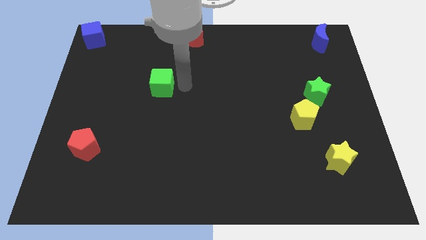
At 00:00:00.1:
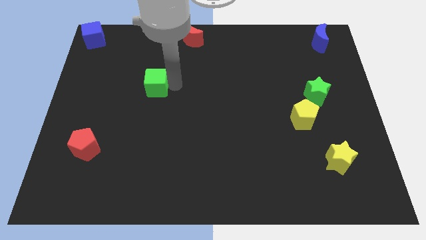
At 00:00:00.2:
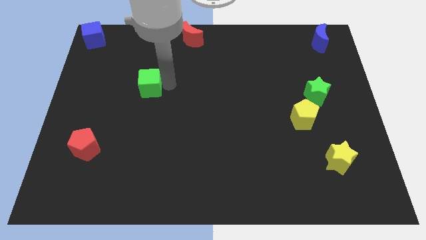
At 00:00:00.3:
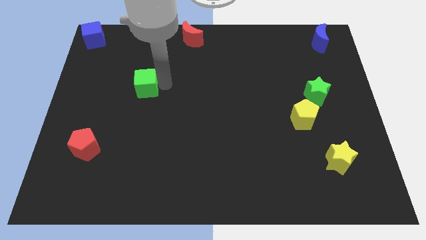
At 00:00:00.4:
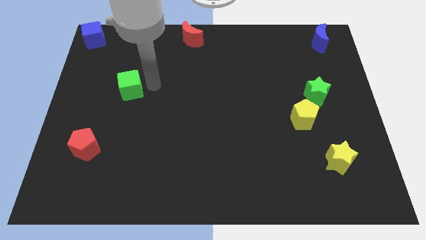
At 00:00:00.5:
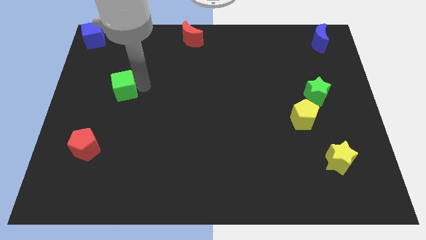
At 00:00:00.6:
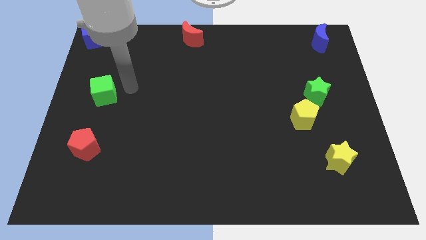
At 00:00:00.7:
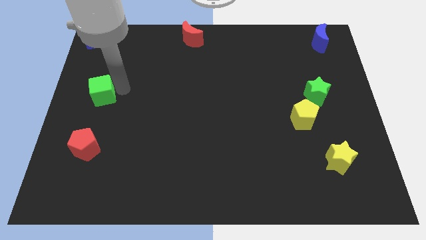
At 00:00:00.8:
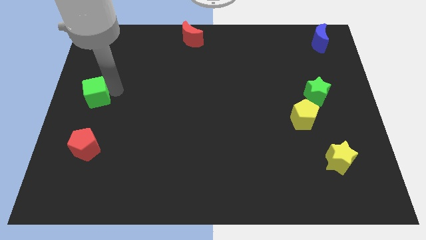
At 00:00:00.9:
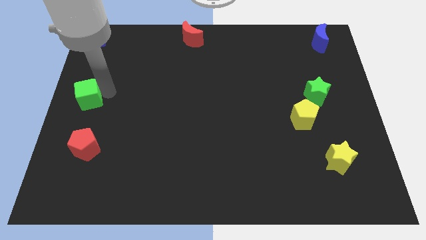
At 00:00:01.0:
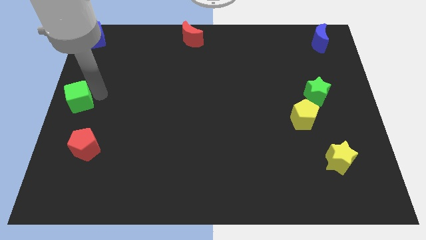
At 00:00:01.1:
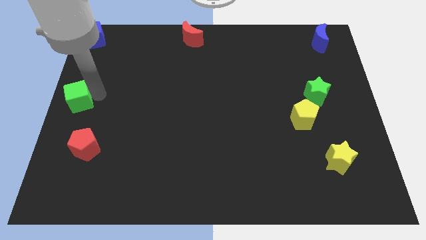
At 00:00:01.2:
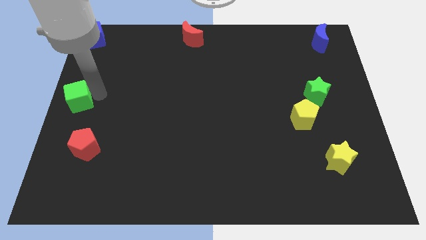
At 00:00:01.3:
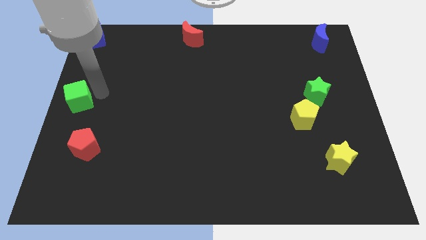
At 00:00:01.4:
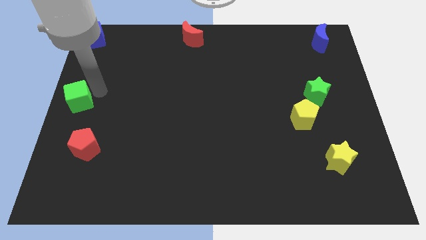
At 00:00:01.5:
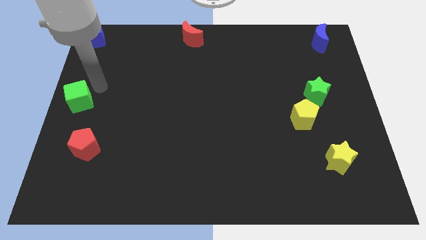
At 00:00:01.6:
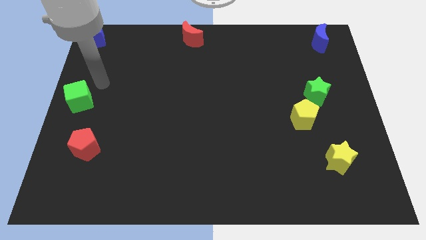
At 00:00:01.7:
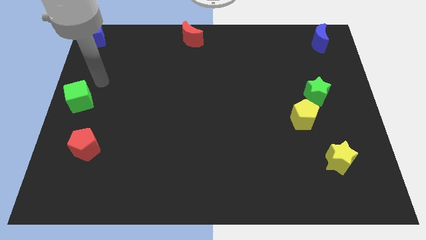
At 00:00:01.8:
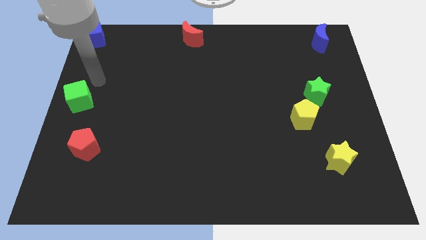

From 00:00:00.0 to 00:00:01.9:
move the green cube to the left center of the board

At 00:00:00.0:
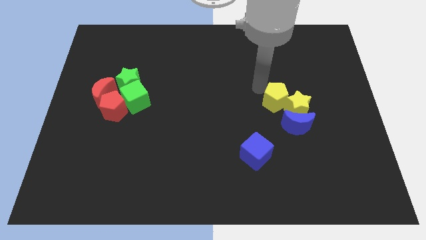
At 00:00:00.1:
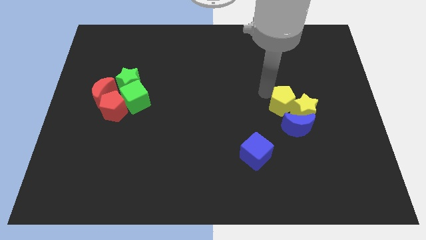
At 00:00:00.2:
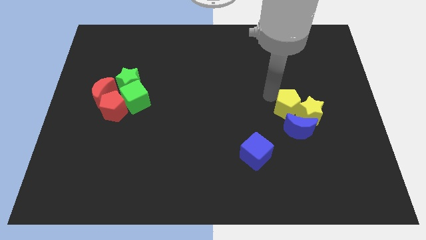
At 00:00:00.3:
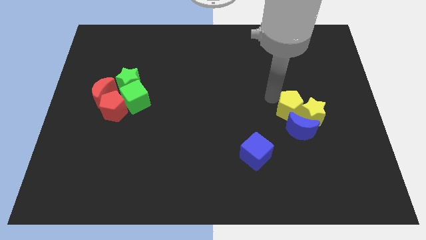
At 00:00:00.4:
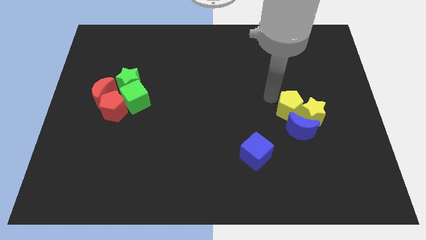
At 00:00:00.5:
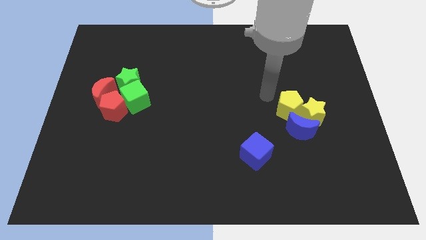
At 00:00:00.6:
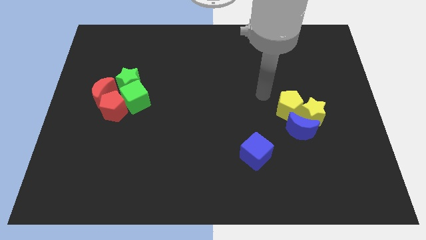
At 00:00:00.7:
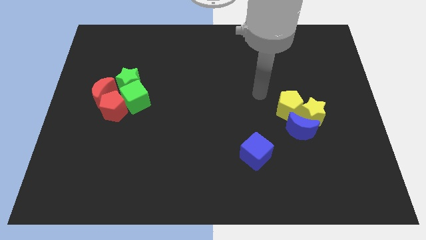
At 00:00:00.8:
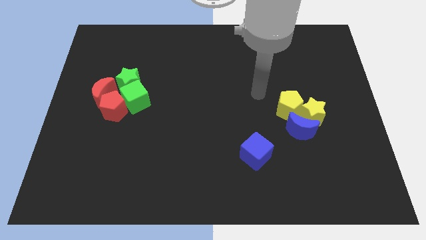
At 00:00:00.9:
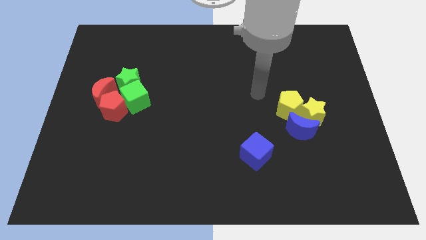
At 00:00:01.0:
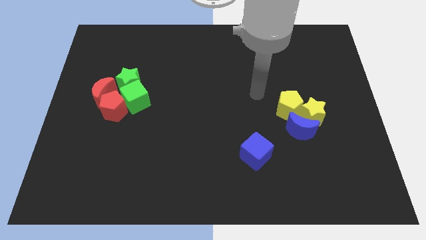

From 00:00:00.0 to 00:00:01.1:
slightly push the yellow star using yellow pentagon to the right

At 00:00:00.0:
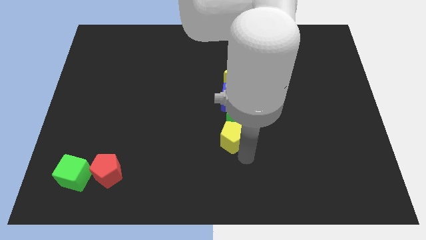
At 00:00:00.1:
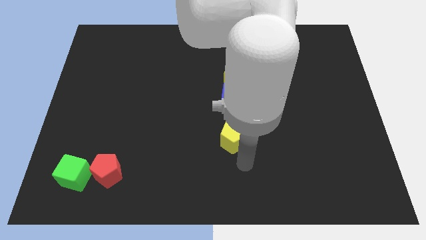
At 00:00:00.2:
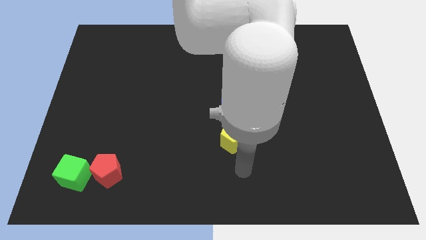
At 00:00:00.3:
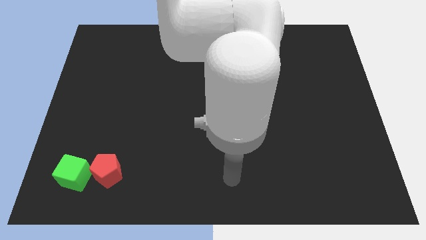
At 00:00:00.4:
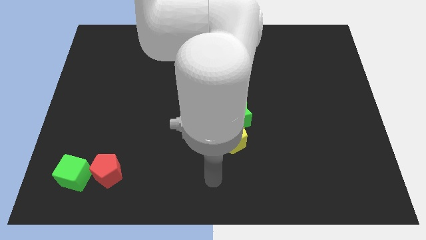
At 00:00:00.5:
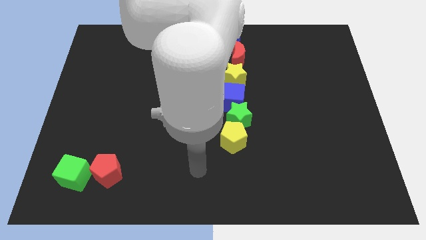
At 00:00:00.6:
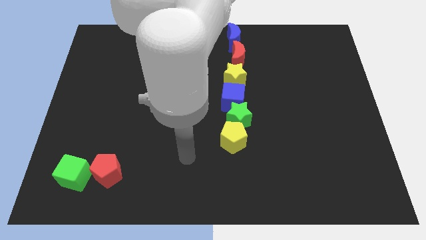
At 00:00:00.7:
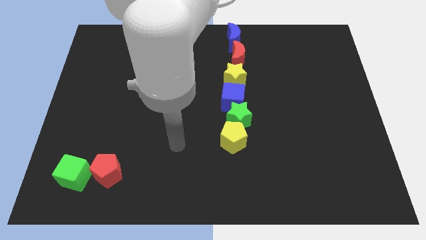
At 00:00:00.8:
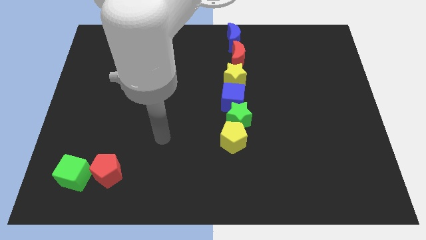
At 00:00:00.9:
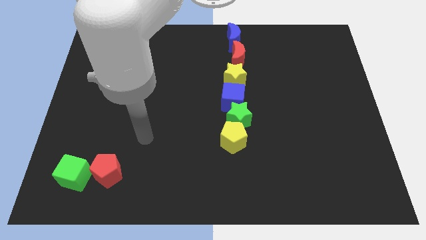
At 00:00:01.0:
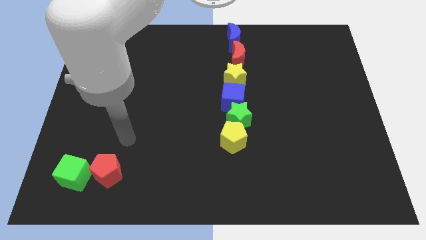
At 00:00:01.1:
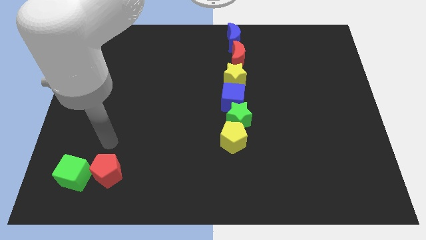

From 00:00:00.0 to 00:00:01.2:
move the arm away from the yellow pentagon

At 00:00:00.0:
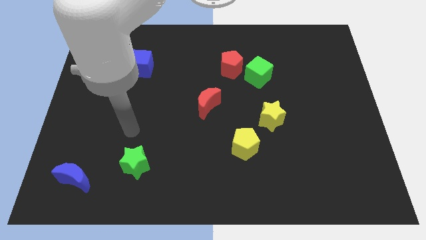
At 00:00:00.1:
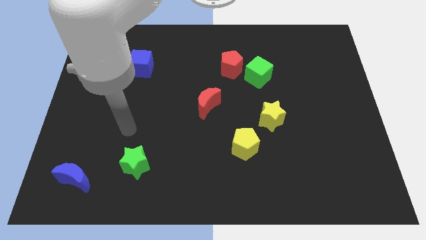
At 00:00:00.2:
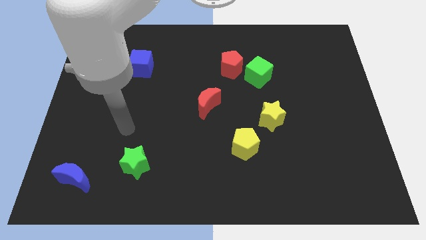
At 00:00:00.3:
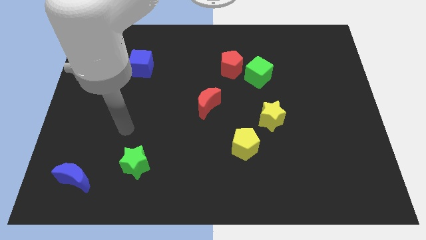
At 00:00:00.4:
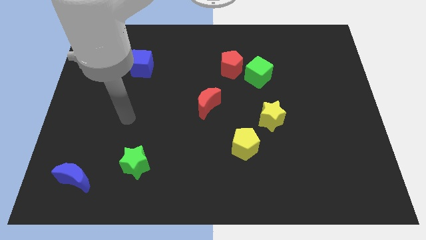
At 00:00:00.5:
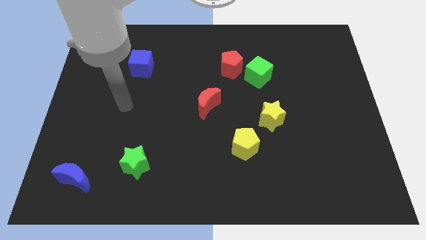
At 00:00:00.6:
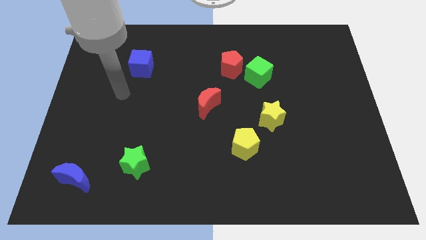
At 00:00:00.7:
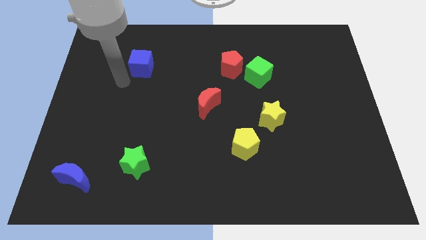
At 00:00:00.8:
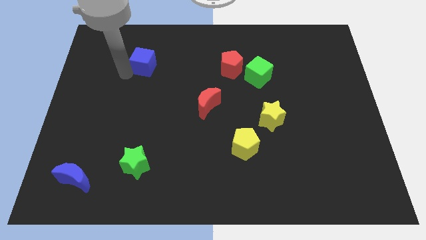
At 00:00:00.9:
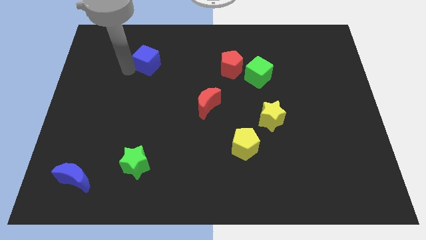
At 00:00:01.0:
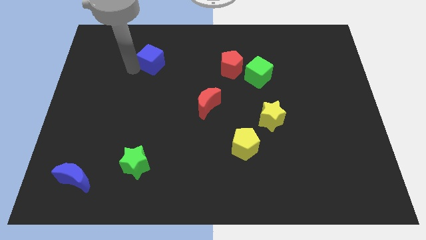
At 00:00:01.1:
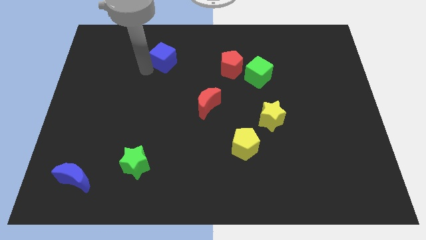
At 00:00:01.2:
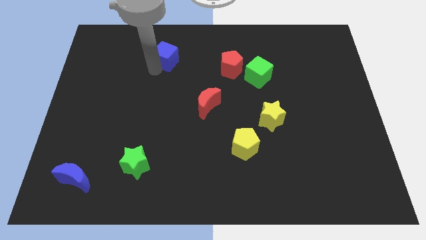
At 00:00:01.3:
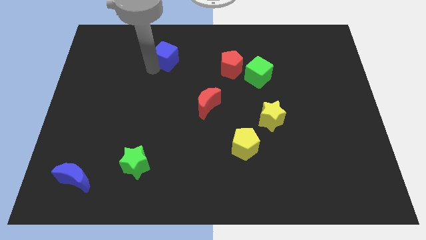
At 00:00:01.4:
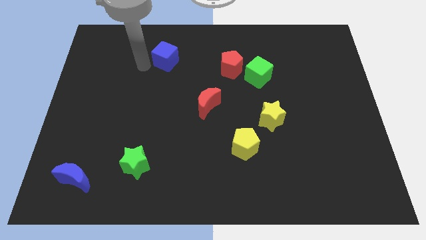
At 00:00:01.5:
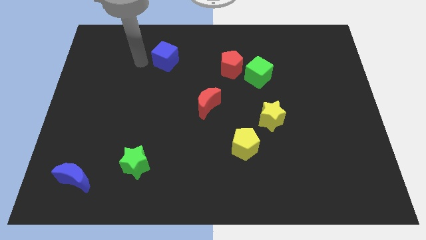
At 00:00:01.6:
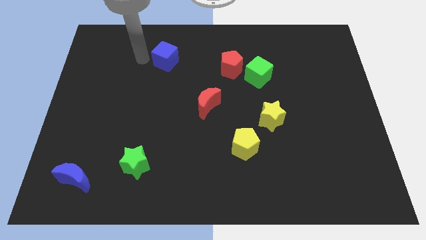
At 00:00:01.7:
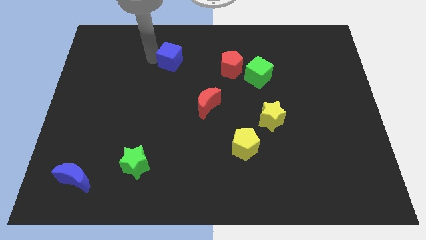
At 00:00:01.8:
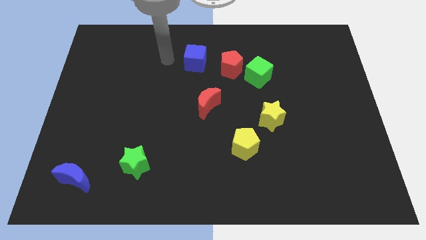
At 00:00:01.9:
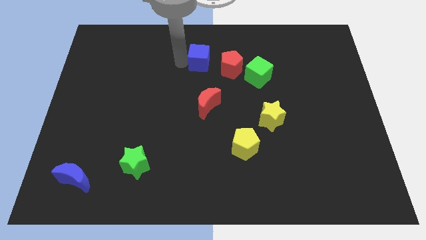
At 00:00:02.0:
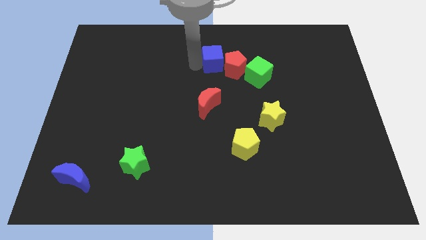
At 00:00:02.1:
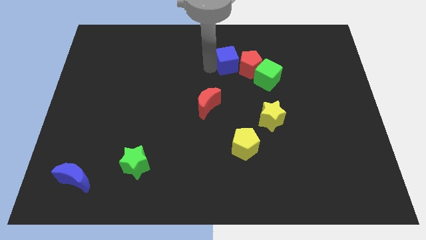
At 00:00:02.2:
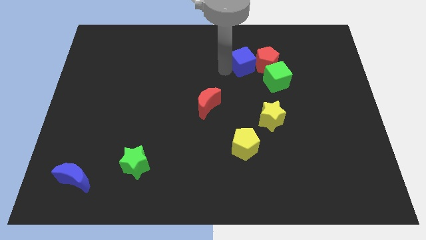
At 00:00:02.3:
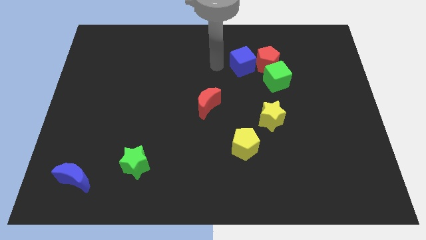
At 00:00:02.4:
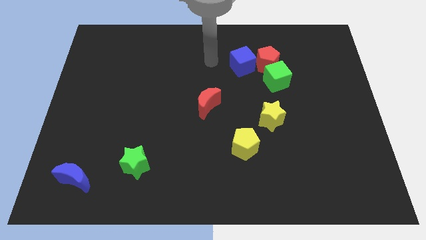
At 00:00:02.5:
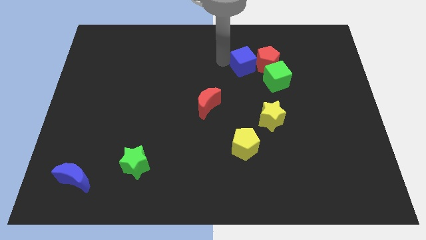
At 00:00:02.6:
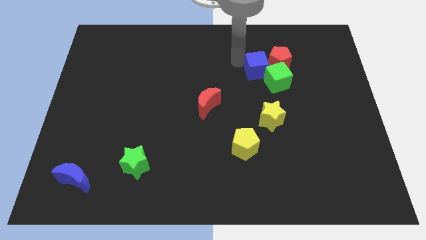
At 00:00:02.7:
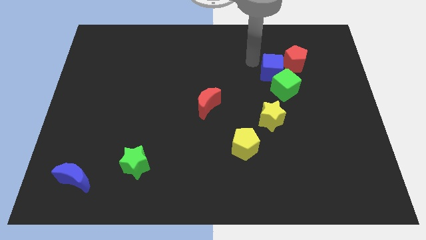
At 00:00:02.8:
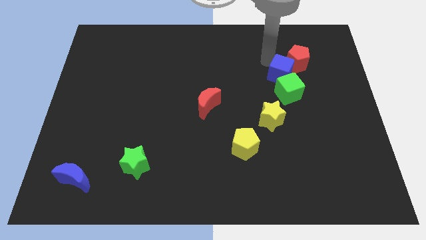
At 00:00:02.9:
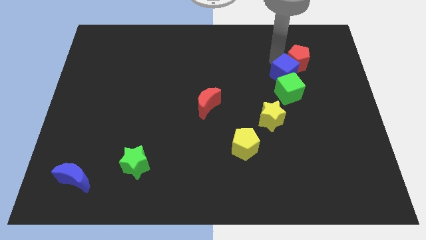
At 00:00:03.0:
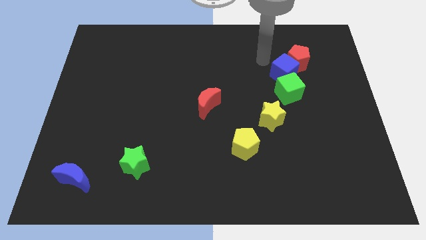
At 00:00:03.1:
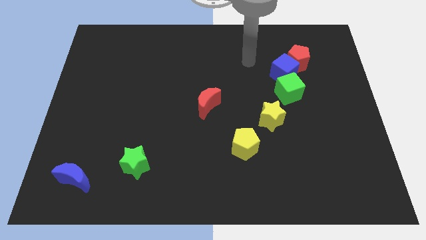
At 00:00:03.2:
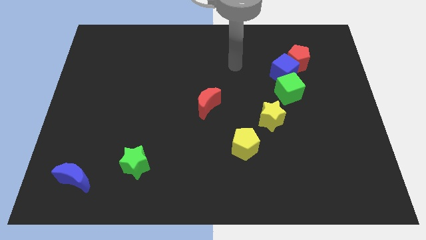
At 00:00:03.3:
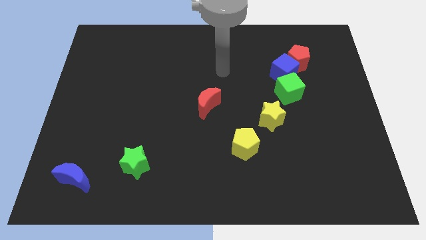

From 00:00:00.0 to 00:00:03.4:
push blue cube and red pentagon towards right side of the board

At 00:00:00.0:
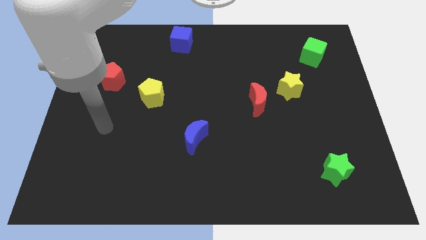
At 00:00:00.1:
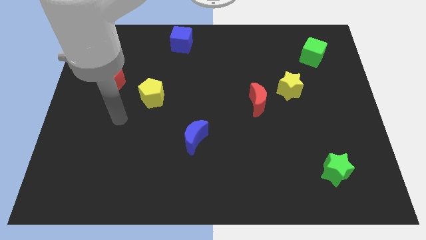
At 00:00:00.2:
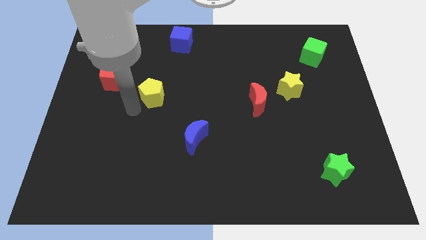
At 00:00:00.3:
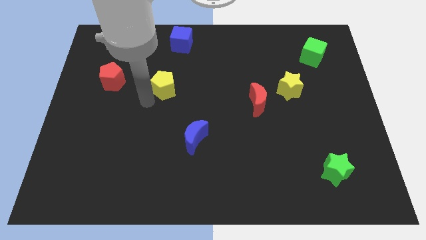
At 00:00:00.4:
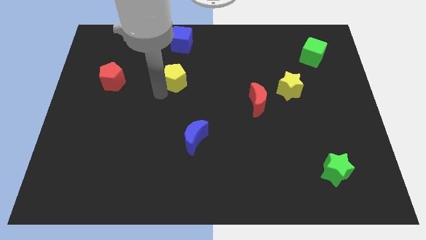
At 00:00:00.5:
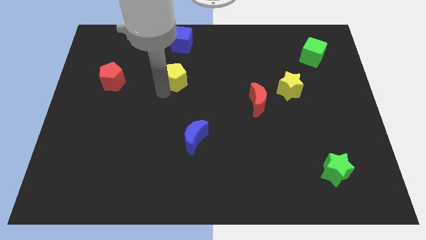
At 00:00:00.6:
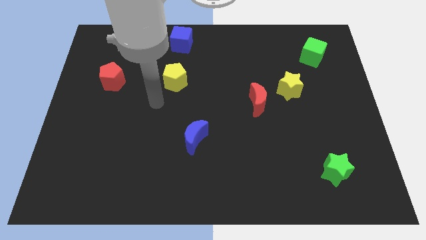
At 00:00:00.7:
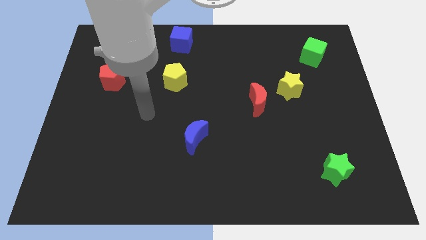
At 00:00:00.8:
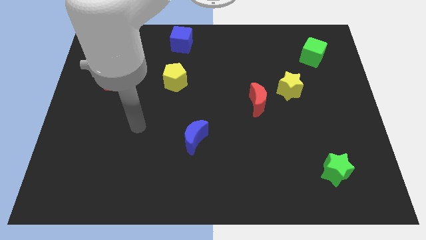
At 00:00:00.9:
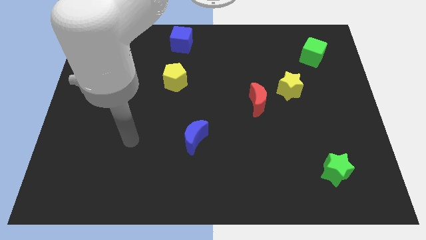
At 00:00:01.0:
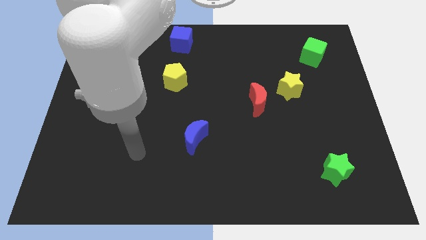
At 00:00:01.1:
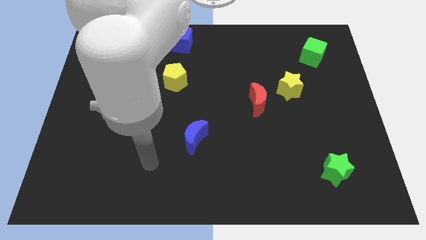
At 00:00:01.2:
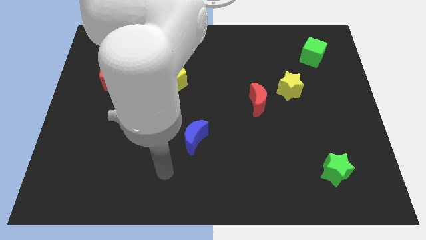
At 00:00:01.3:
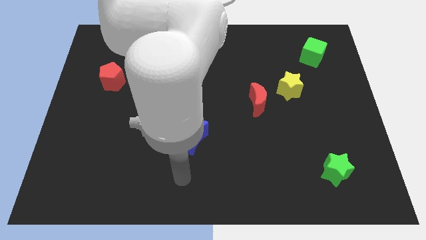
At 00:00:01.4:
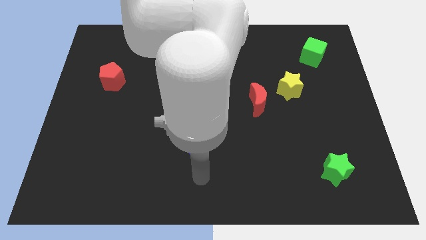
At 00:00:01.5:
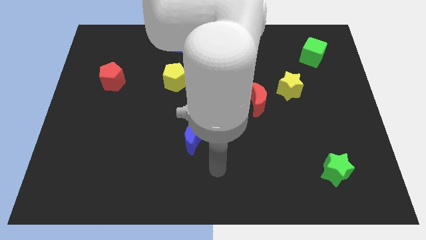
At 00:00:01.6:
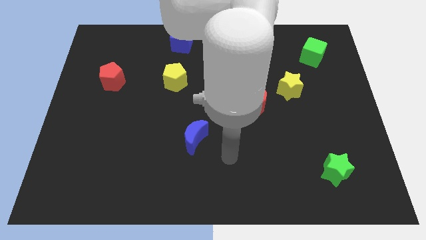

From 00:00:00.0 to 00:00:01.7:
push yellow pentagon a bit close to the blue cube
